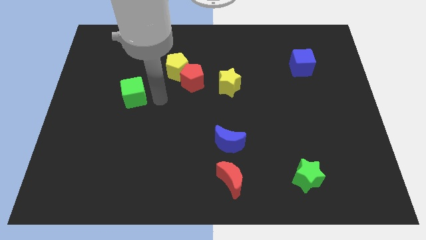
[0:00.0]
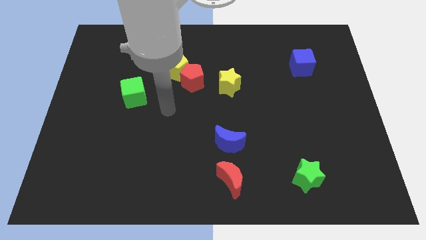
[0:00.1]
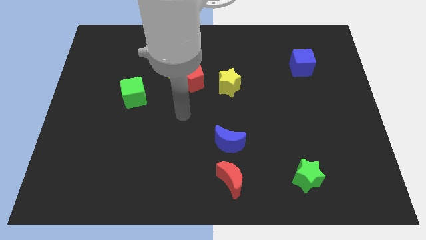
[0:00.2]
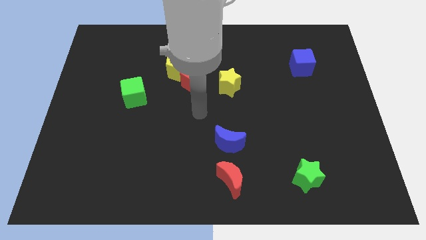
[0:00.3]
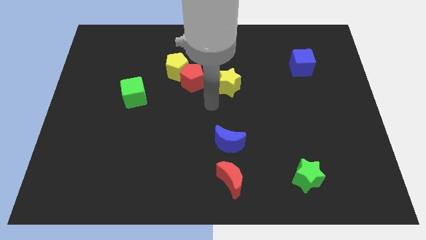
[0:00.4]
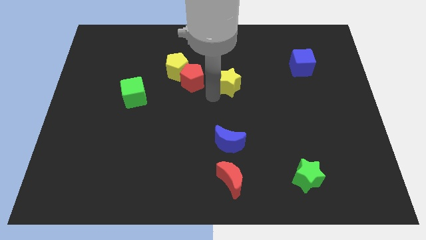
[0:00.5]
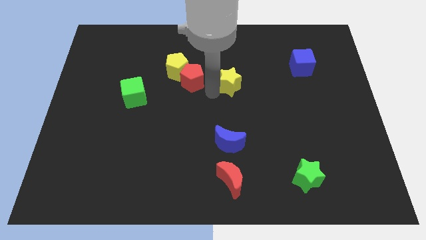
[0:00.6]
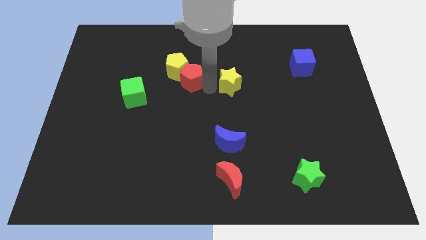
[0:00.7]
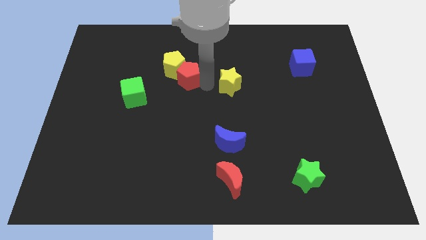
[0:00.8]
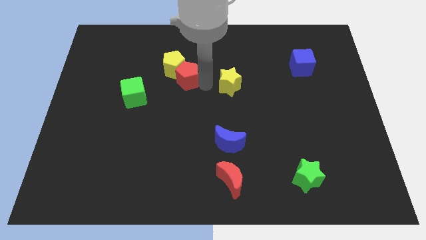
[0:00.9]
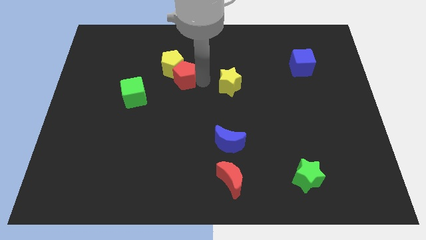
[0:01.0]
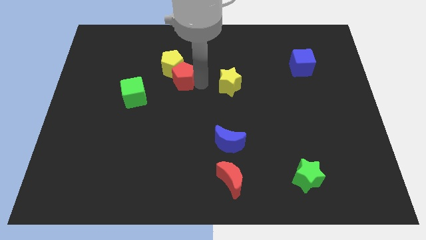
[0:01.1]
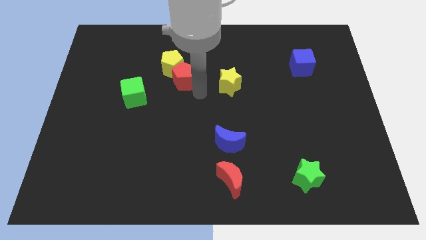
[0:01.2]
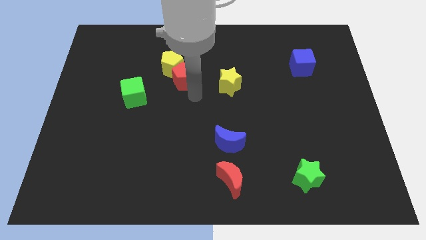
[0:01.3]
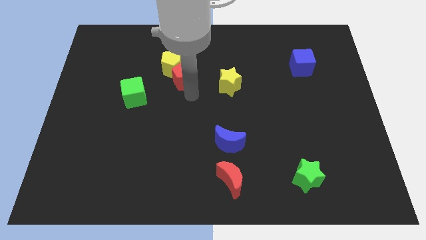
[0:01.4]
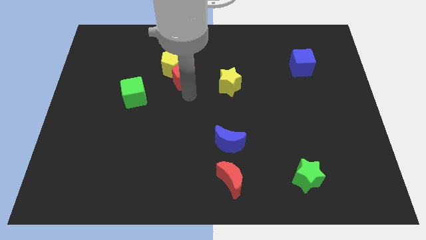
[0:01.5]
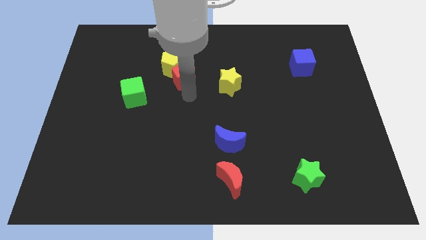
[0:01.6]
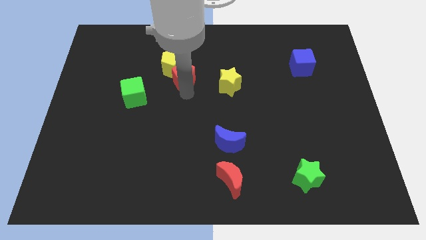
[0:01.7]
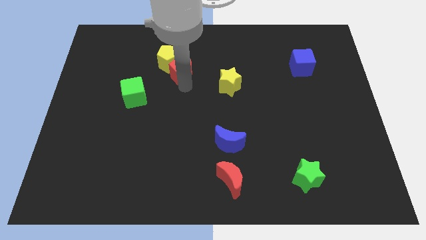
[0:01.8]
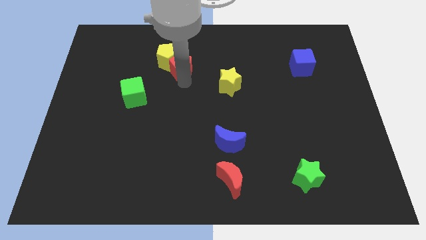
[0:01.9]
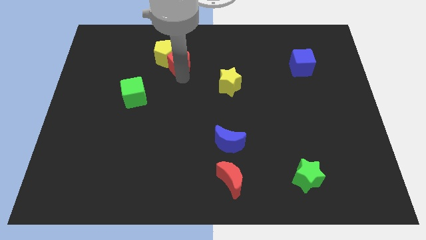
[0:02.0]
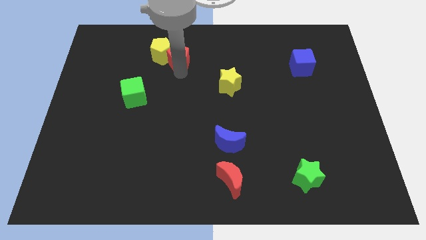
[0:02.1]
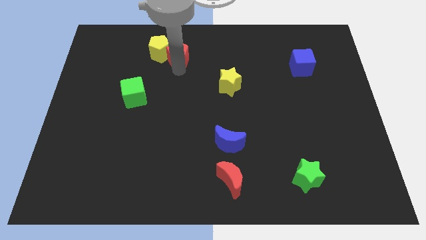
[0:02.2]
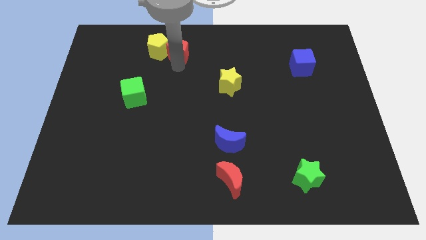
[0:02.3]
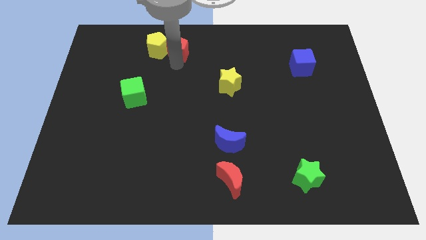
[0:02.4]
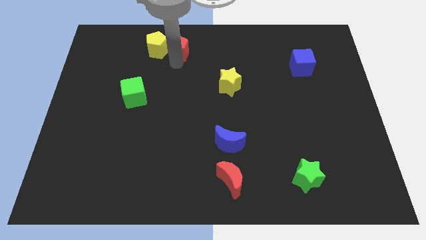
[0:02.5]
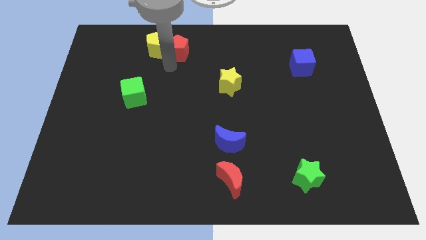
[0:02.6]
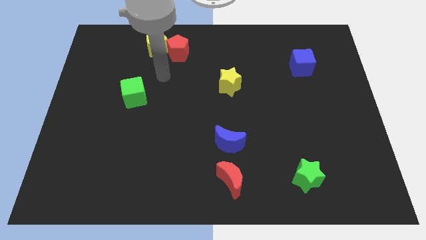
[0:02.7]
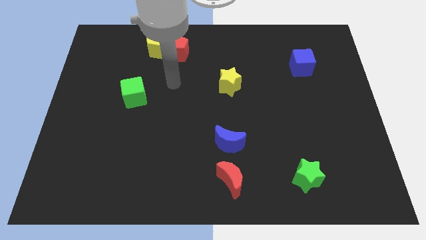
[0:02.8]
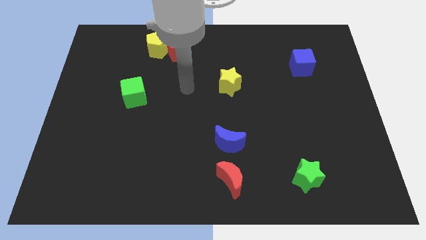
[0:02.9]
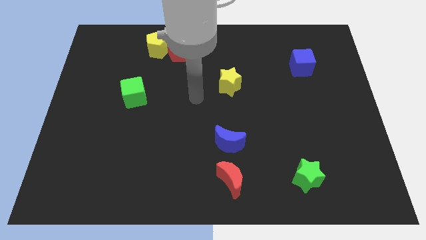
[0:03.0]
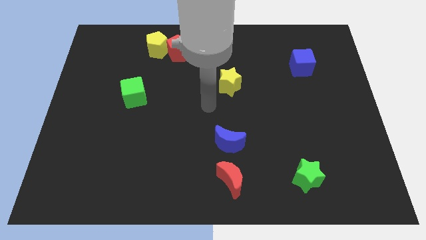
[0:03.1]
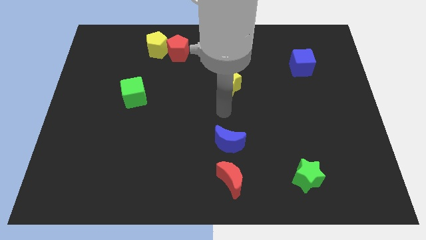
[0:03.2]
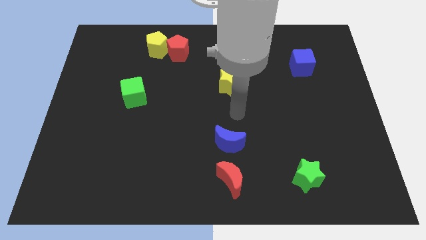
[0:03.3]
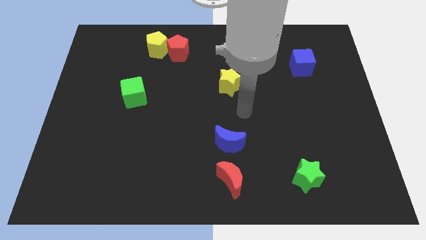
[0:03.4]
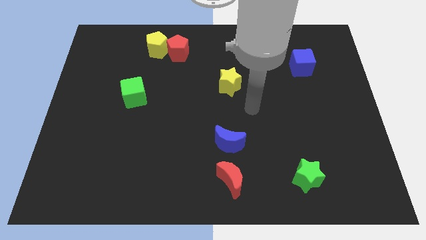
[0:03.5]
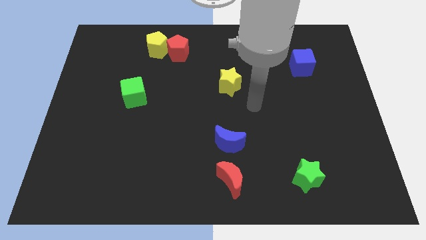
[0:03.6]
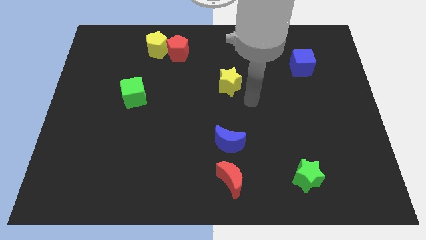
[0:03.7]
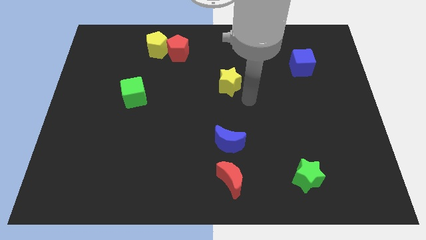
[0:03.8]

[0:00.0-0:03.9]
push the pentagons to the top of the board

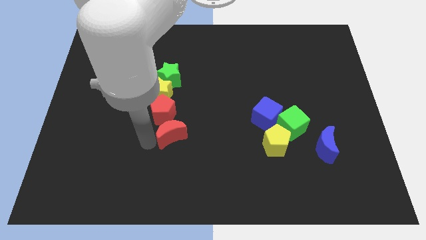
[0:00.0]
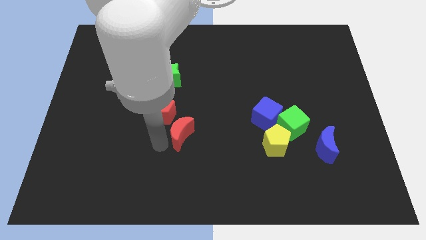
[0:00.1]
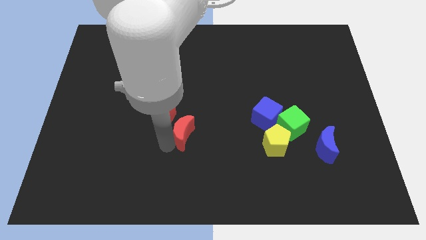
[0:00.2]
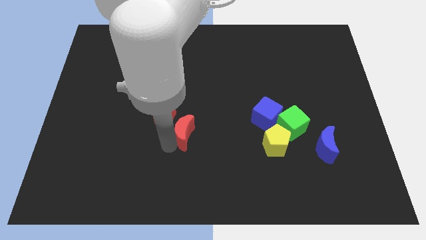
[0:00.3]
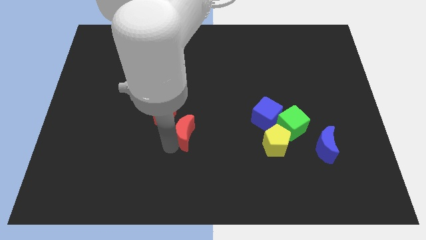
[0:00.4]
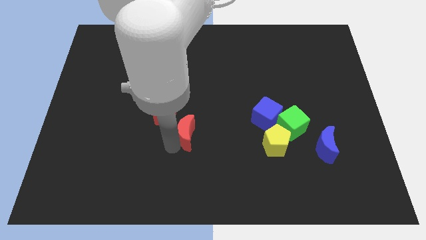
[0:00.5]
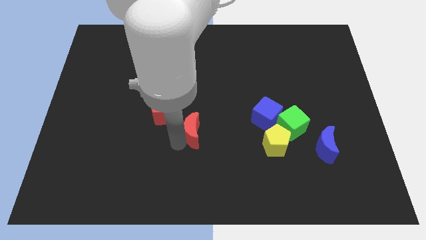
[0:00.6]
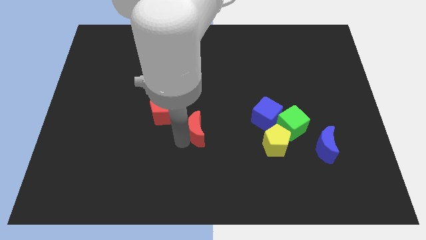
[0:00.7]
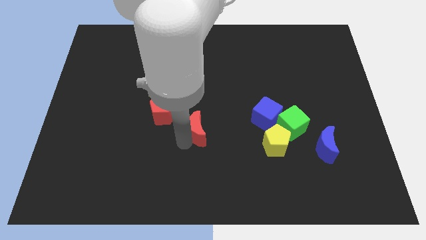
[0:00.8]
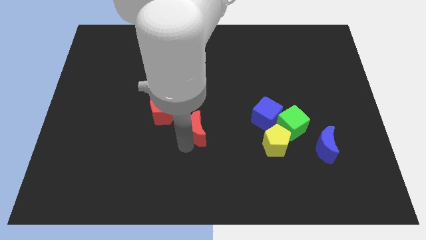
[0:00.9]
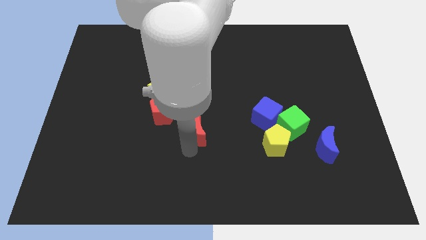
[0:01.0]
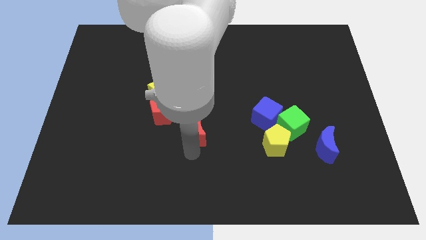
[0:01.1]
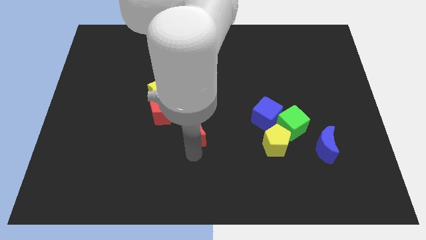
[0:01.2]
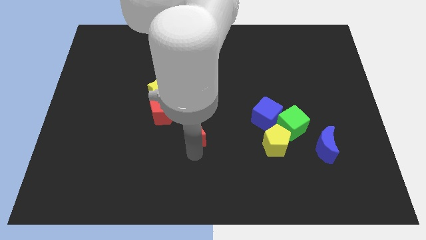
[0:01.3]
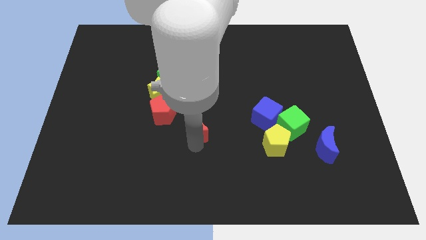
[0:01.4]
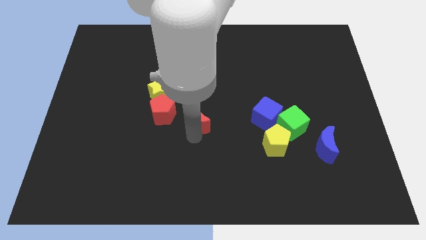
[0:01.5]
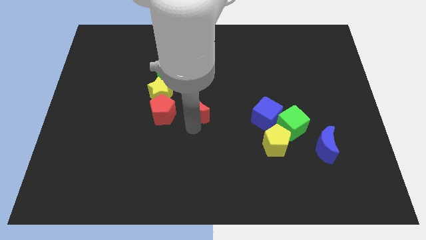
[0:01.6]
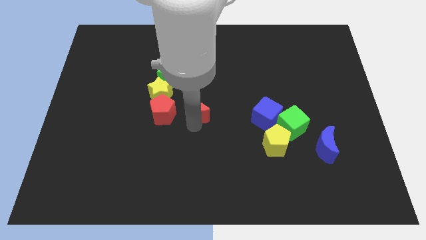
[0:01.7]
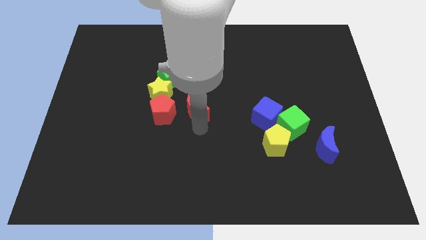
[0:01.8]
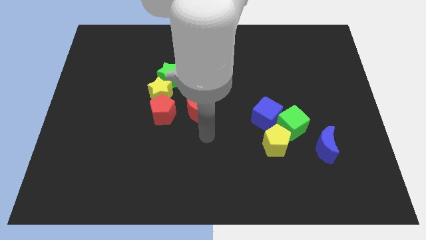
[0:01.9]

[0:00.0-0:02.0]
place the red crescent to the right side of the red pentagon

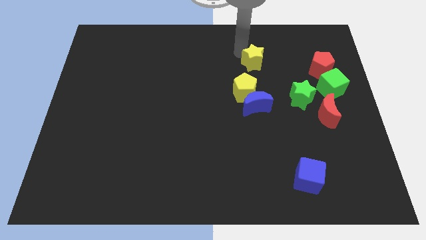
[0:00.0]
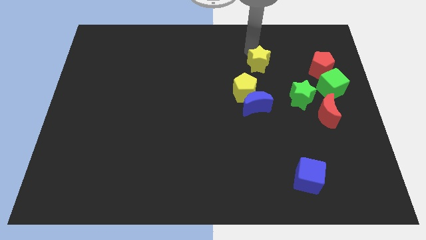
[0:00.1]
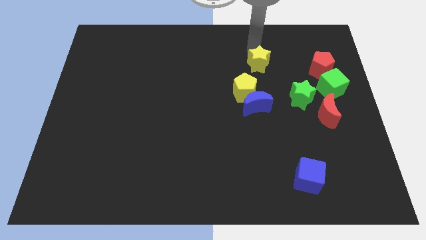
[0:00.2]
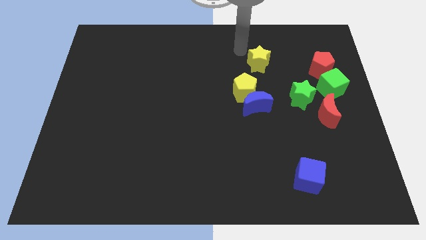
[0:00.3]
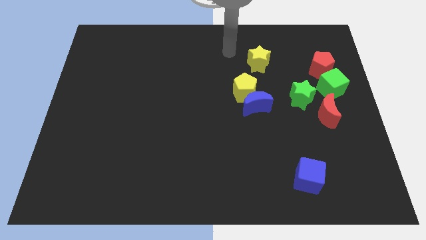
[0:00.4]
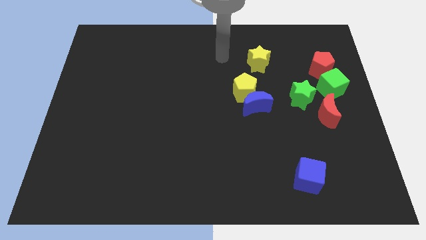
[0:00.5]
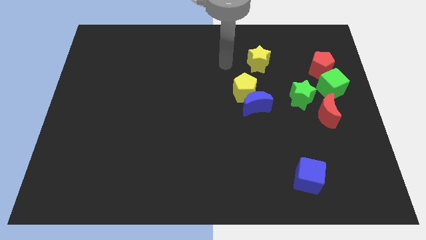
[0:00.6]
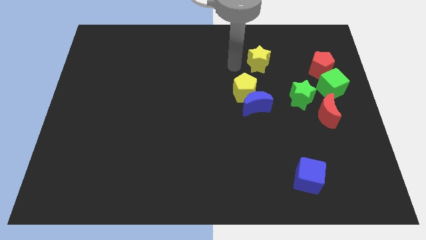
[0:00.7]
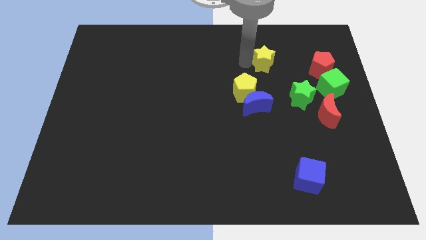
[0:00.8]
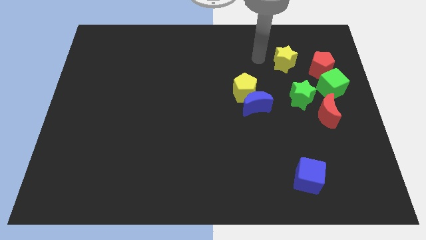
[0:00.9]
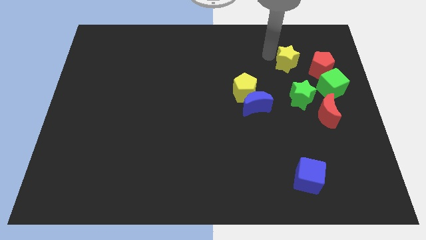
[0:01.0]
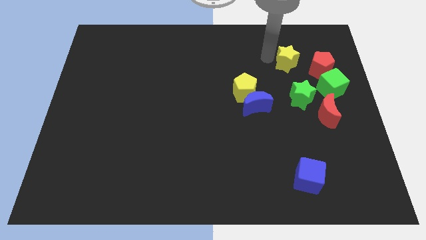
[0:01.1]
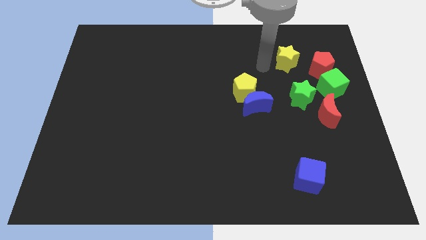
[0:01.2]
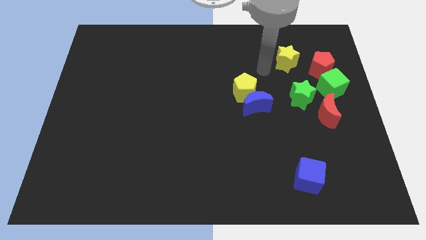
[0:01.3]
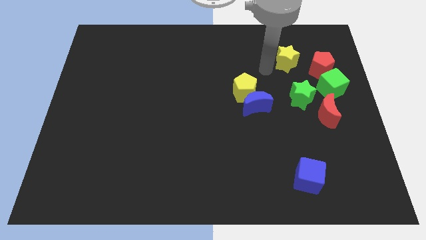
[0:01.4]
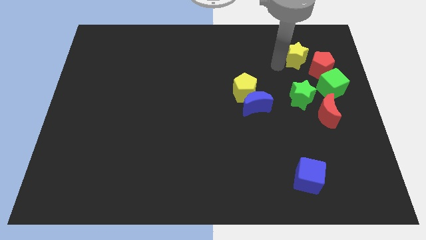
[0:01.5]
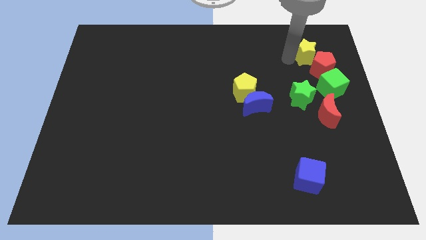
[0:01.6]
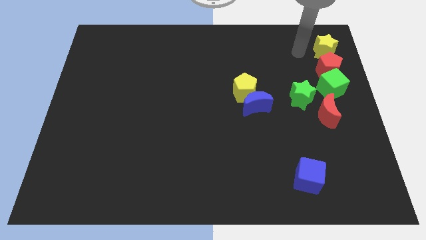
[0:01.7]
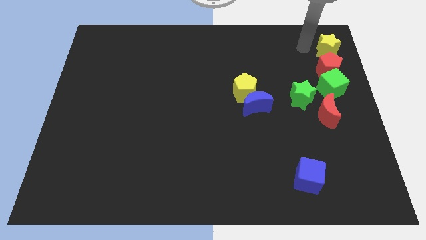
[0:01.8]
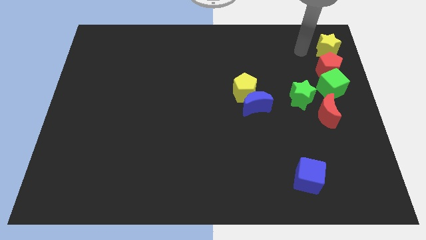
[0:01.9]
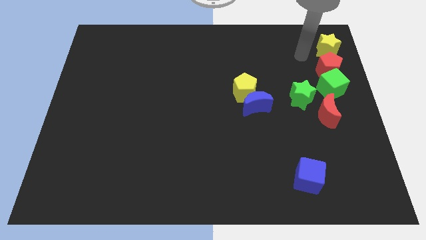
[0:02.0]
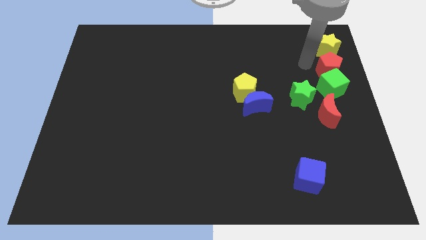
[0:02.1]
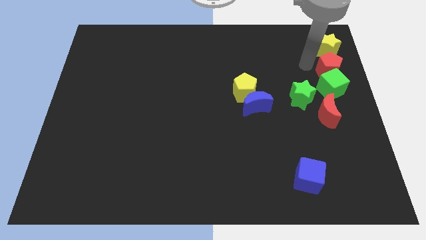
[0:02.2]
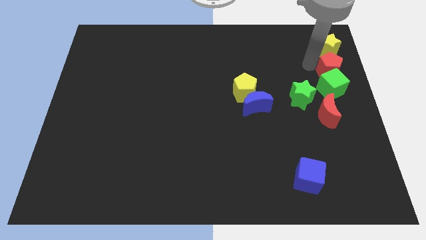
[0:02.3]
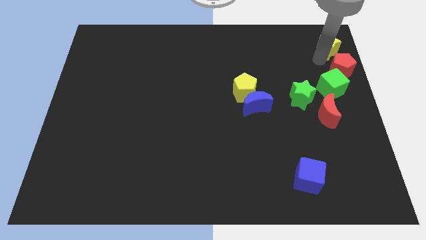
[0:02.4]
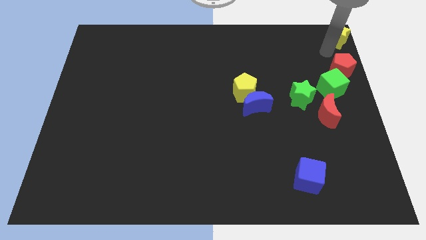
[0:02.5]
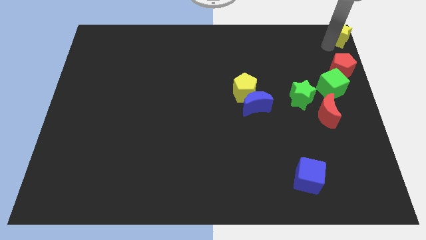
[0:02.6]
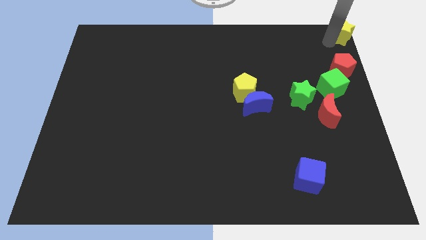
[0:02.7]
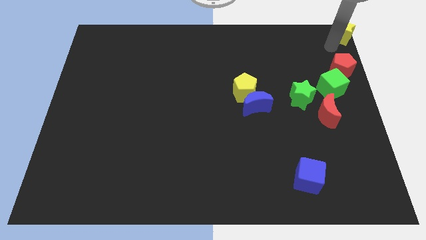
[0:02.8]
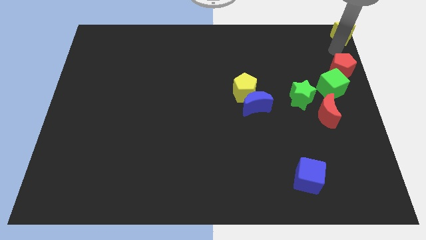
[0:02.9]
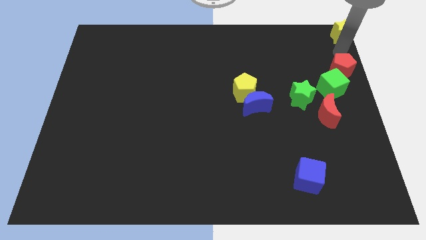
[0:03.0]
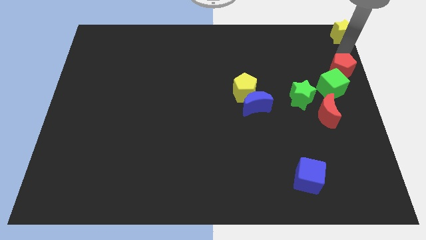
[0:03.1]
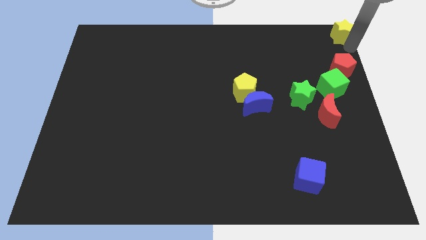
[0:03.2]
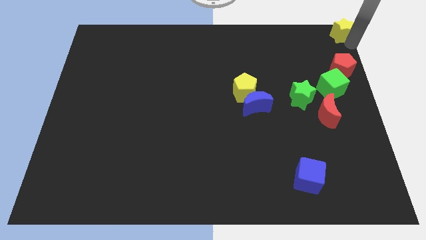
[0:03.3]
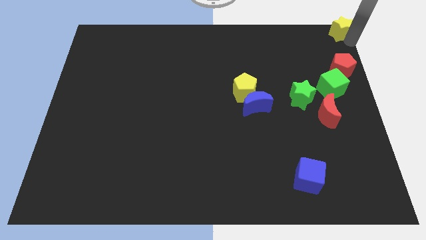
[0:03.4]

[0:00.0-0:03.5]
place yellow star towards top right corner
